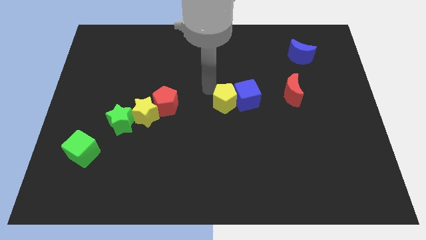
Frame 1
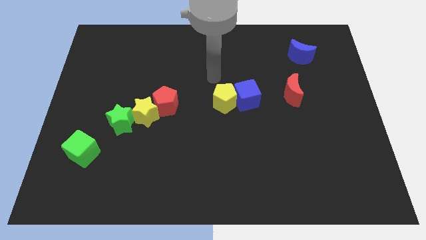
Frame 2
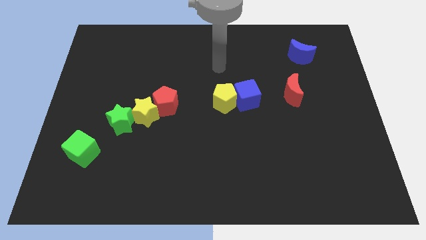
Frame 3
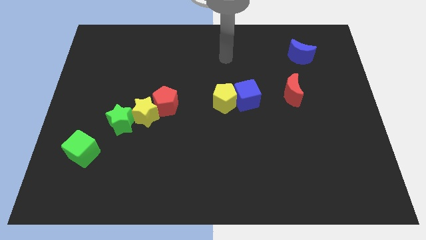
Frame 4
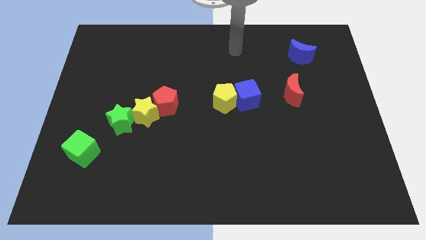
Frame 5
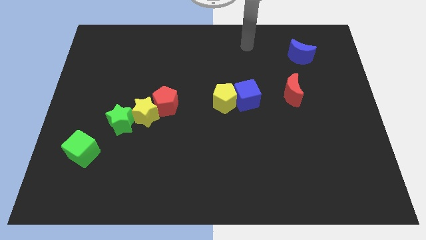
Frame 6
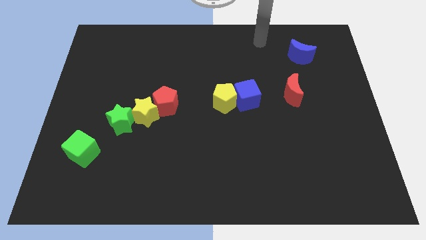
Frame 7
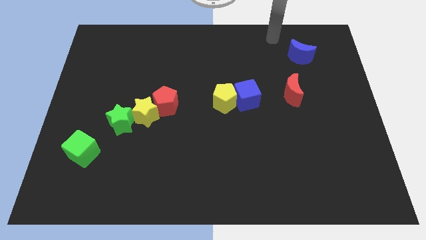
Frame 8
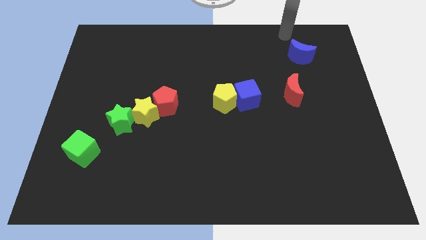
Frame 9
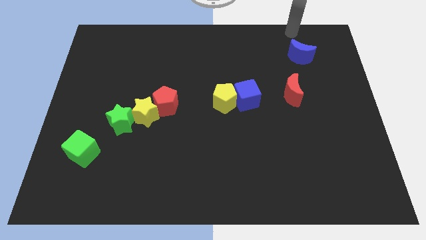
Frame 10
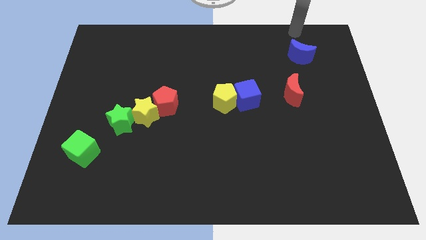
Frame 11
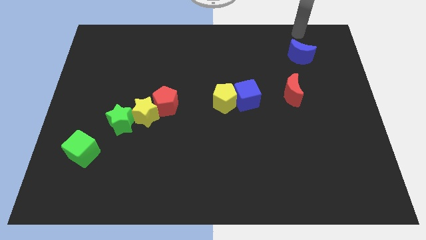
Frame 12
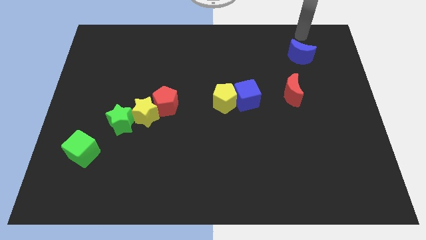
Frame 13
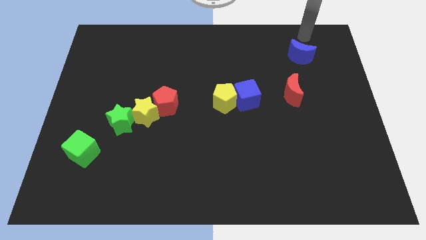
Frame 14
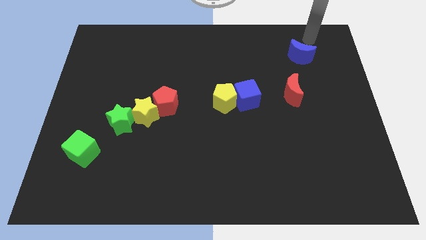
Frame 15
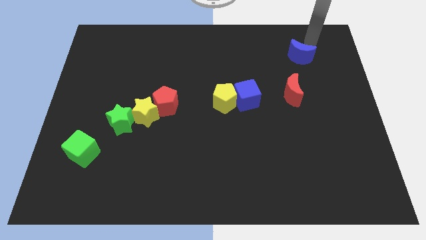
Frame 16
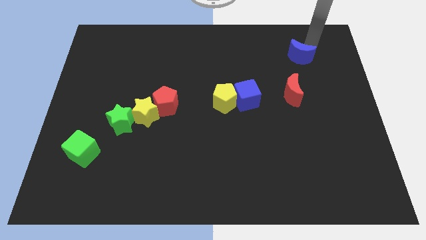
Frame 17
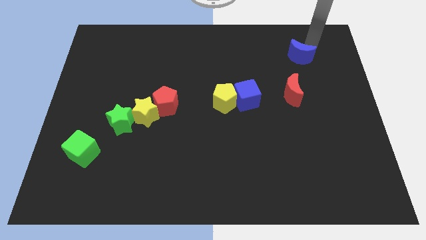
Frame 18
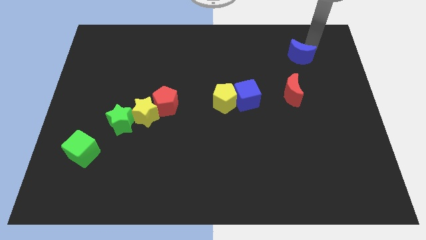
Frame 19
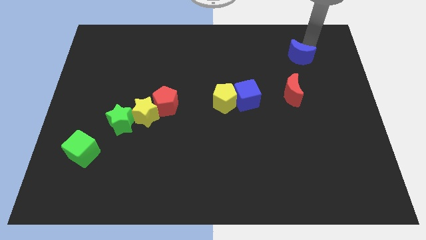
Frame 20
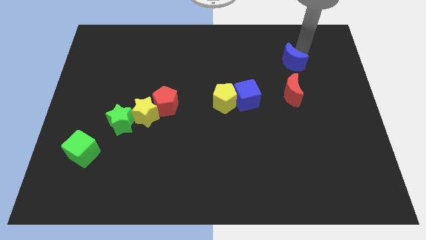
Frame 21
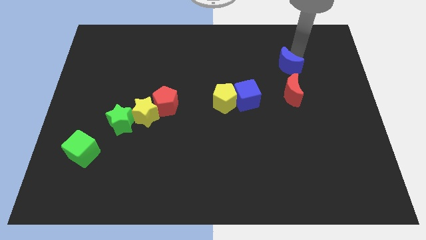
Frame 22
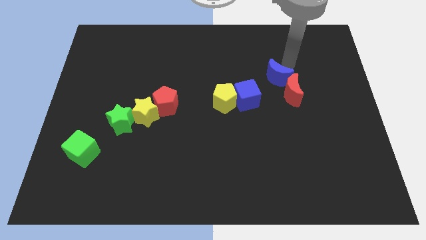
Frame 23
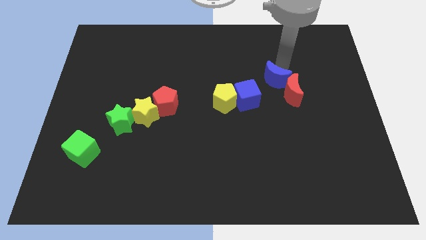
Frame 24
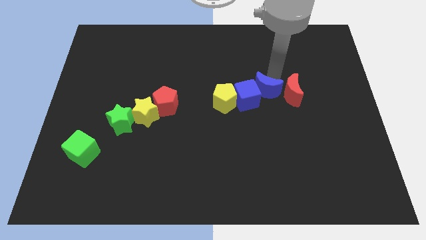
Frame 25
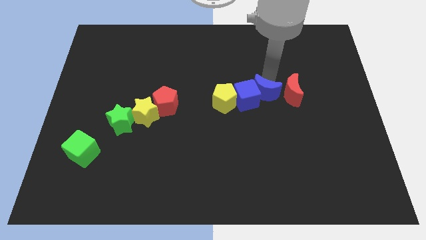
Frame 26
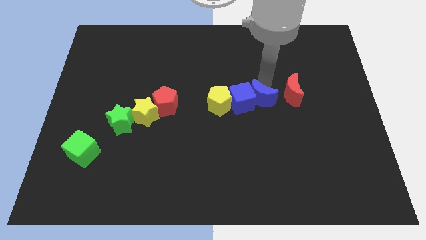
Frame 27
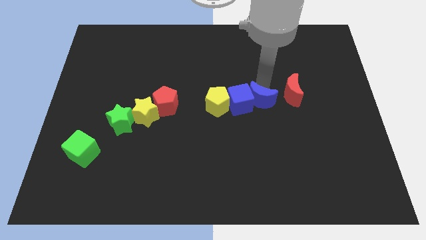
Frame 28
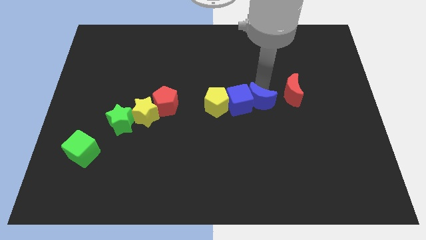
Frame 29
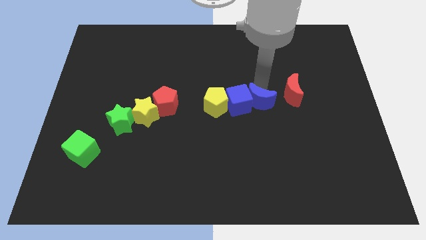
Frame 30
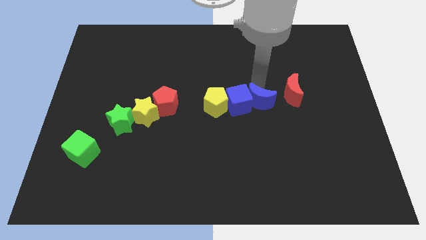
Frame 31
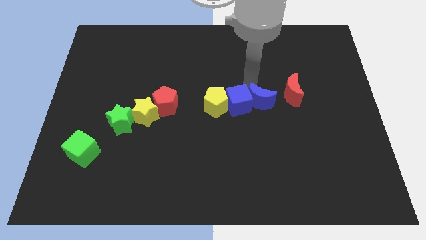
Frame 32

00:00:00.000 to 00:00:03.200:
push the blue moon into the blue cube

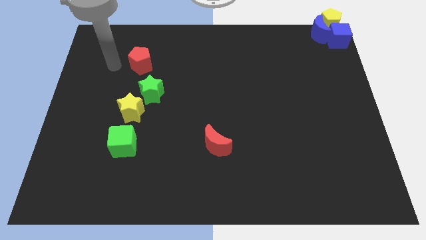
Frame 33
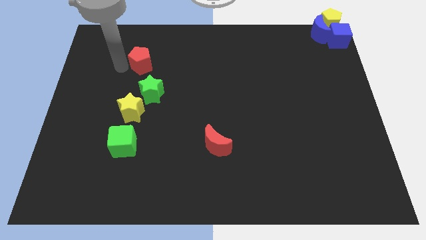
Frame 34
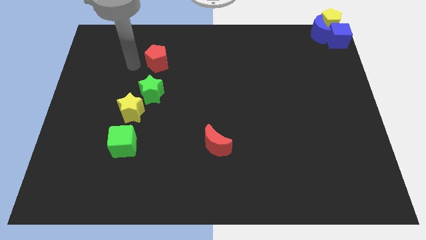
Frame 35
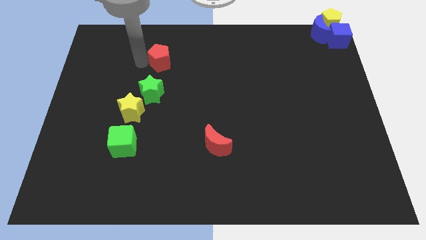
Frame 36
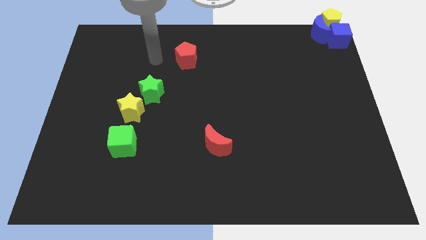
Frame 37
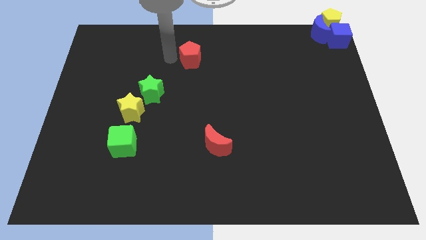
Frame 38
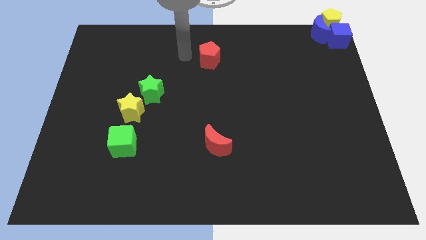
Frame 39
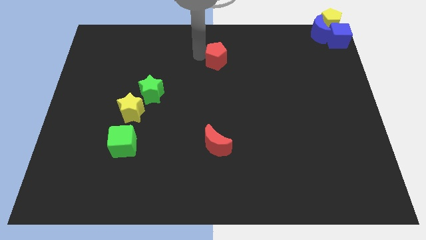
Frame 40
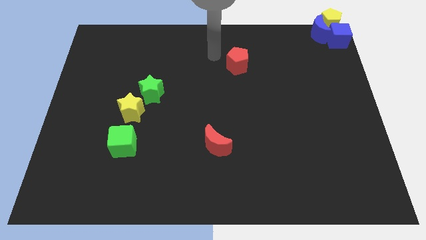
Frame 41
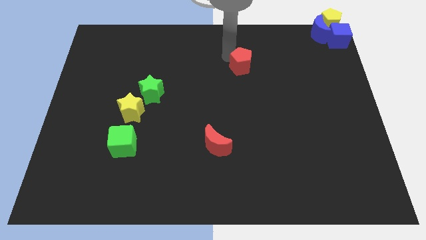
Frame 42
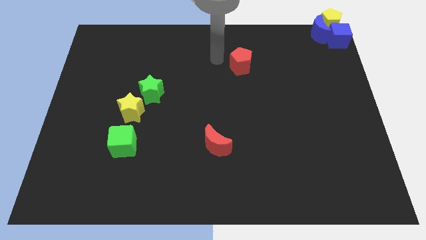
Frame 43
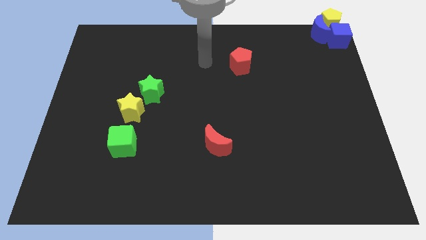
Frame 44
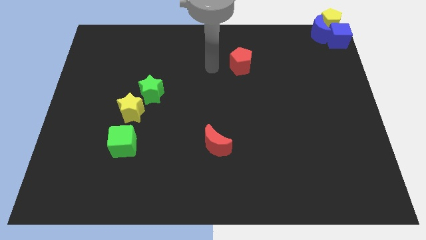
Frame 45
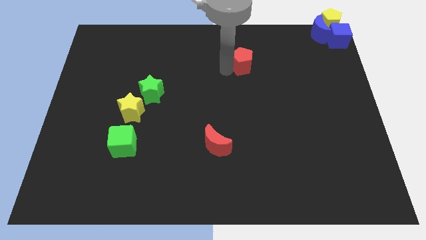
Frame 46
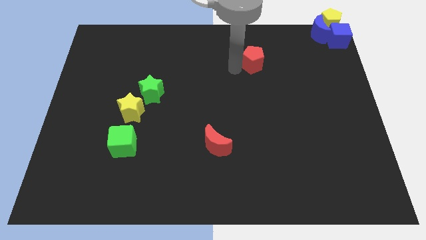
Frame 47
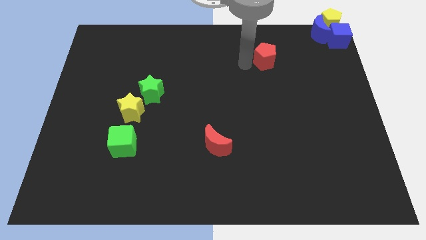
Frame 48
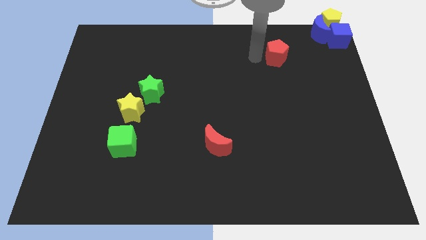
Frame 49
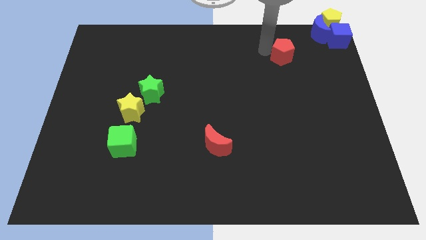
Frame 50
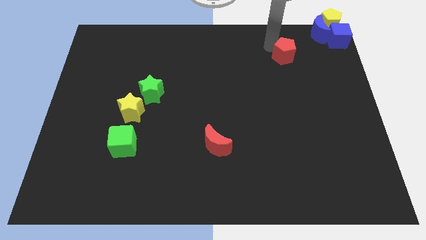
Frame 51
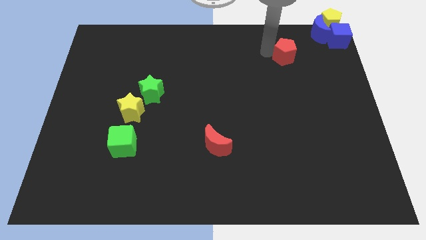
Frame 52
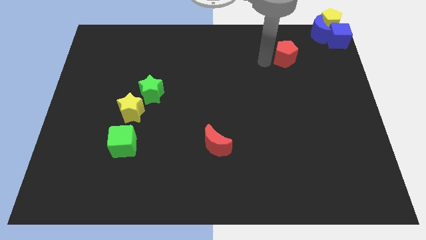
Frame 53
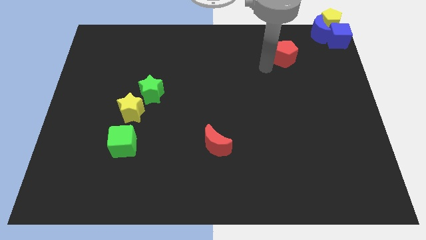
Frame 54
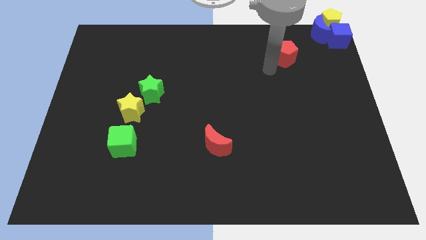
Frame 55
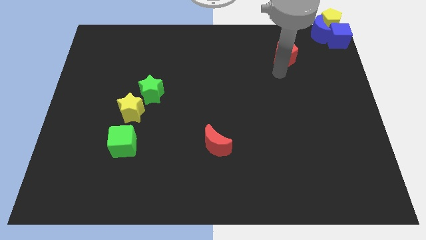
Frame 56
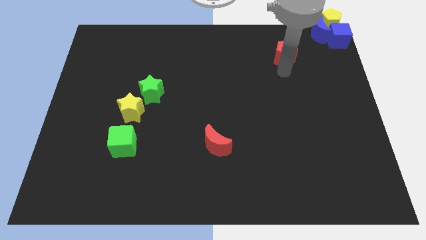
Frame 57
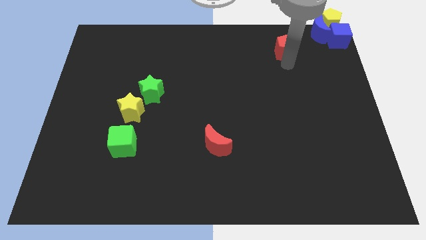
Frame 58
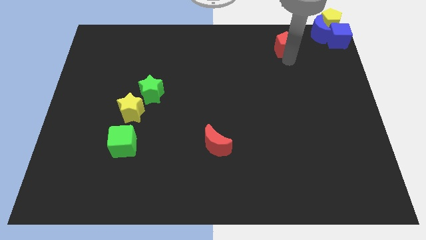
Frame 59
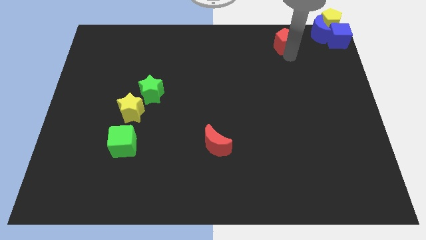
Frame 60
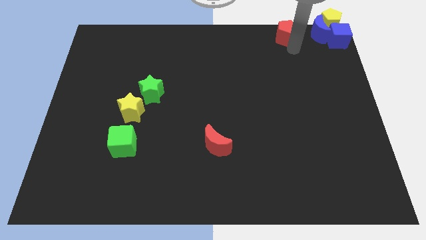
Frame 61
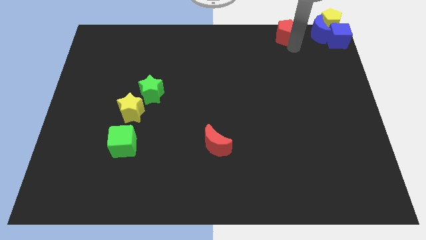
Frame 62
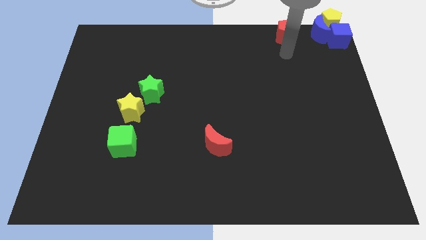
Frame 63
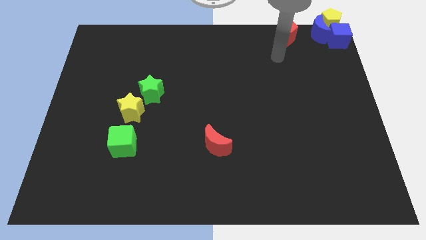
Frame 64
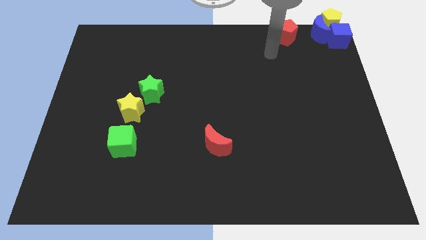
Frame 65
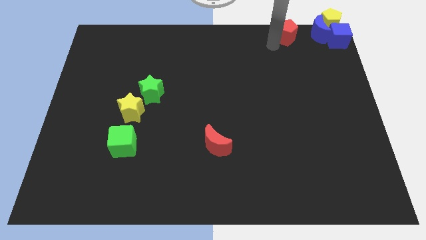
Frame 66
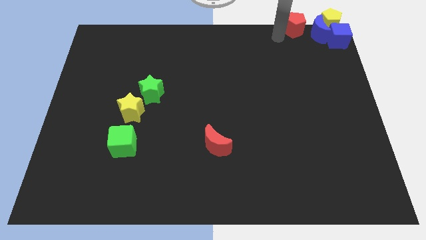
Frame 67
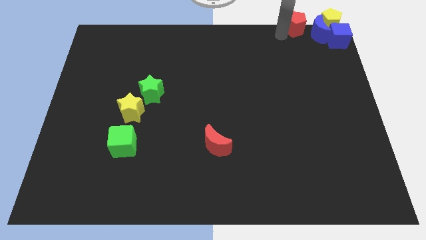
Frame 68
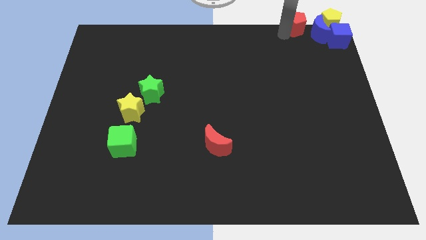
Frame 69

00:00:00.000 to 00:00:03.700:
place the red pentagon at top right

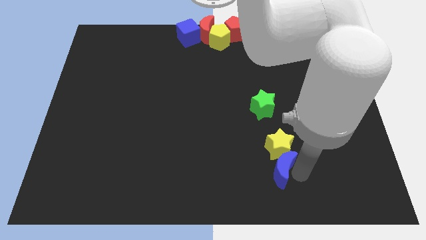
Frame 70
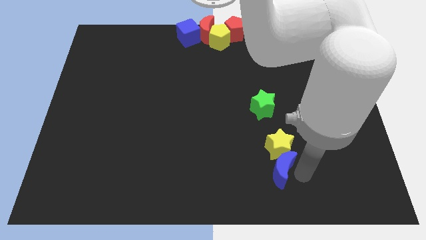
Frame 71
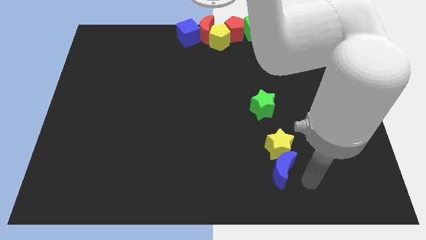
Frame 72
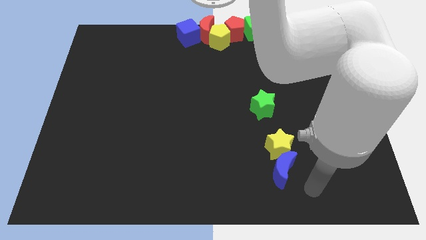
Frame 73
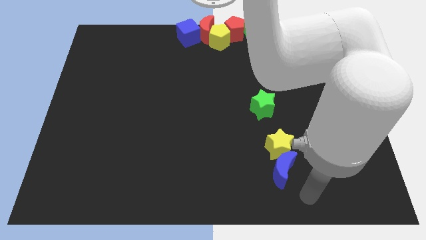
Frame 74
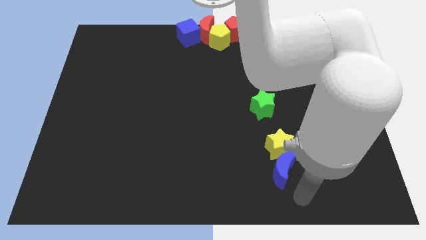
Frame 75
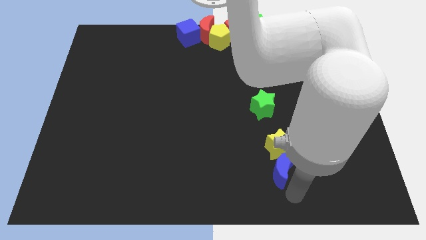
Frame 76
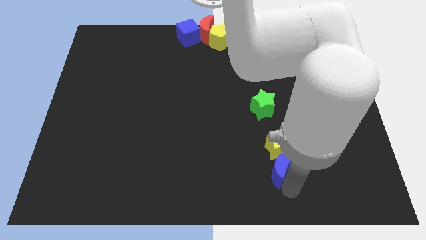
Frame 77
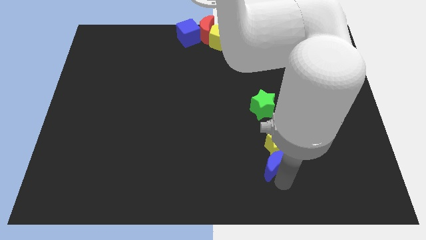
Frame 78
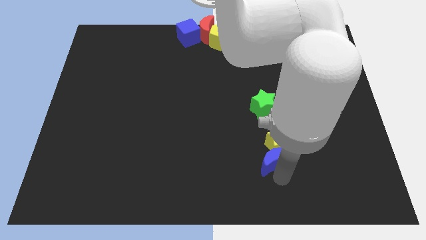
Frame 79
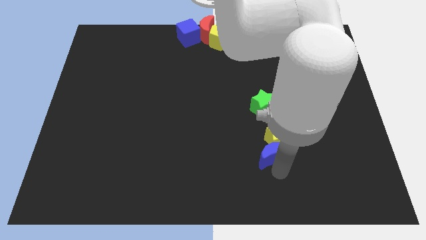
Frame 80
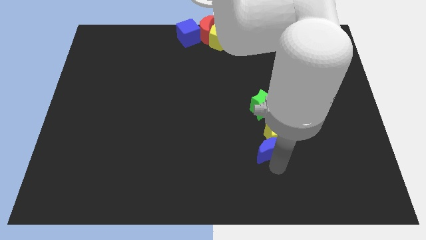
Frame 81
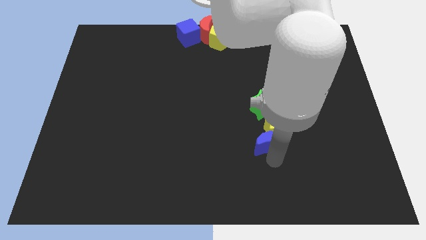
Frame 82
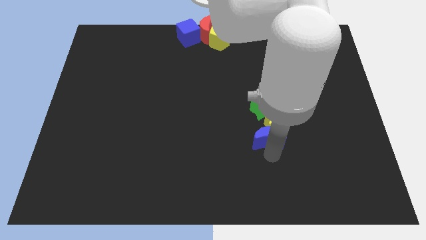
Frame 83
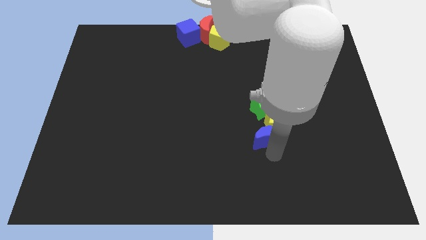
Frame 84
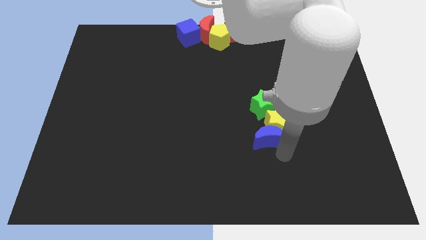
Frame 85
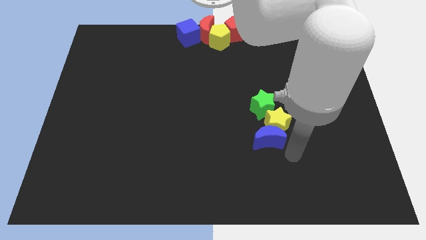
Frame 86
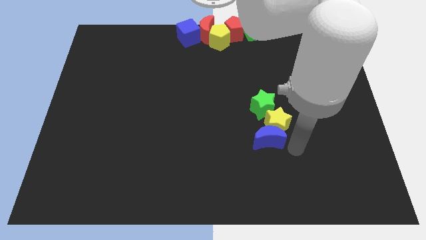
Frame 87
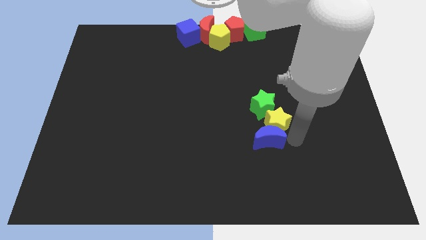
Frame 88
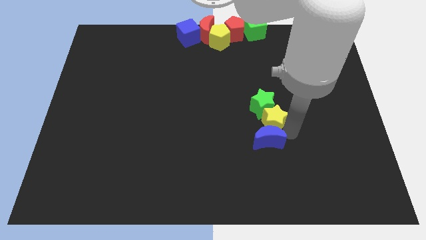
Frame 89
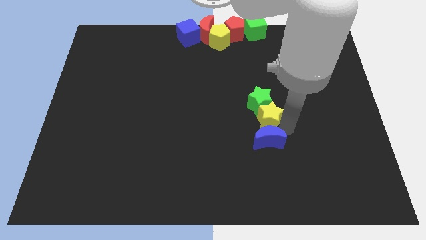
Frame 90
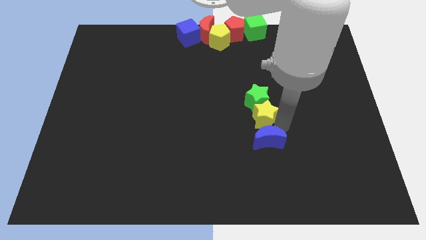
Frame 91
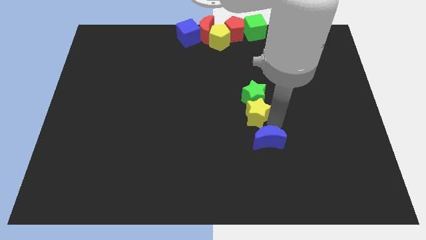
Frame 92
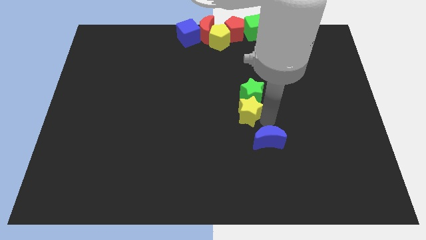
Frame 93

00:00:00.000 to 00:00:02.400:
move the blue crescent and yellow star below the green star
